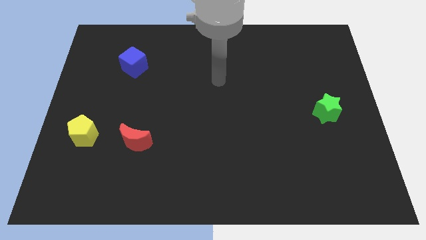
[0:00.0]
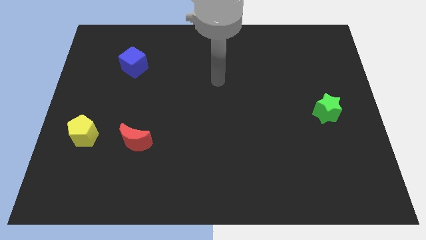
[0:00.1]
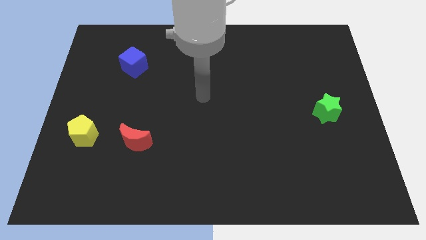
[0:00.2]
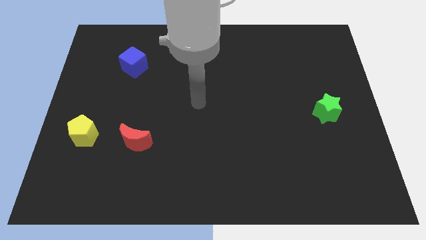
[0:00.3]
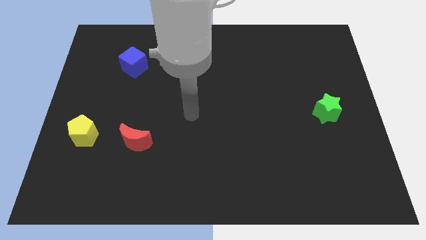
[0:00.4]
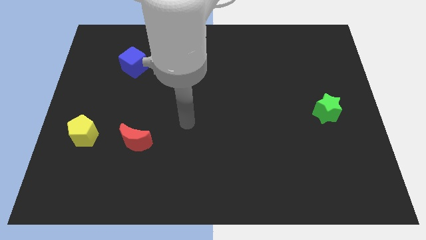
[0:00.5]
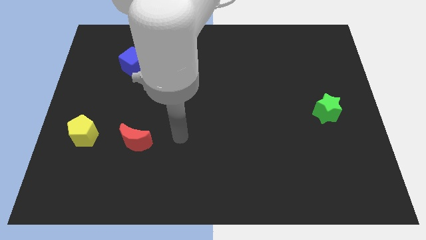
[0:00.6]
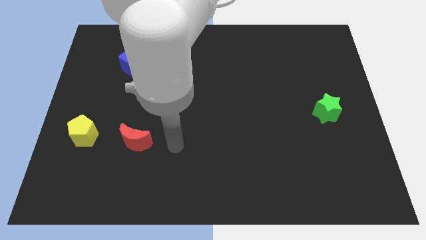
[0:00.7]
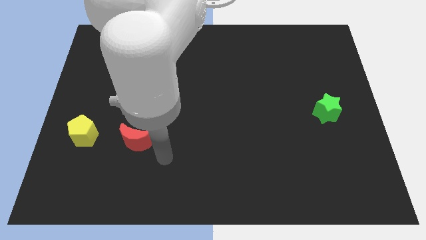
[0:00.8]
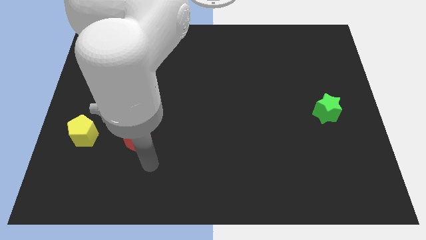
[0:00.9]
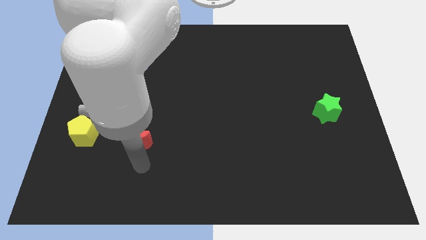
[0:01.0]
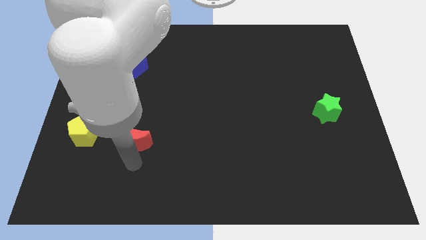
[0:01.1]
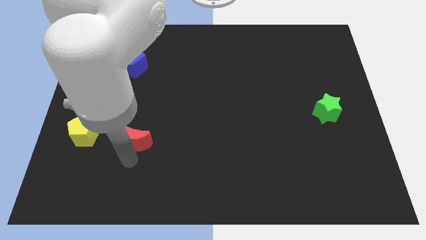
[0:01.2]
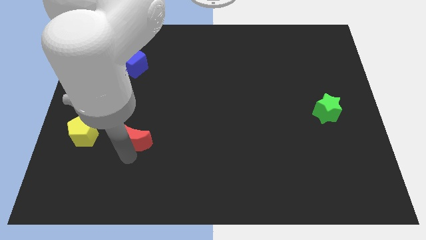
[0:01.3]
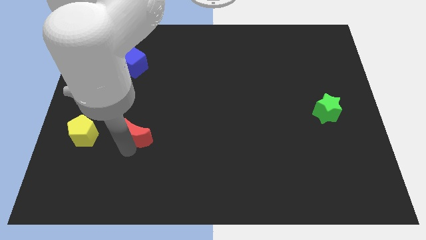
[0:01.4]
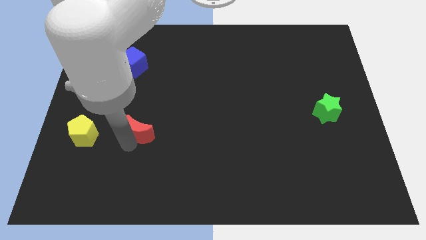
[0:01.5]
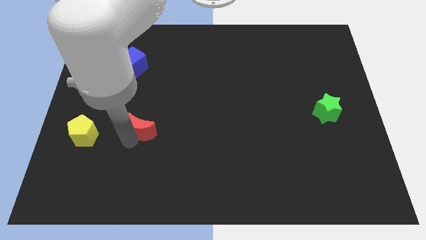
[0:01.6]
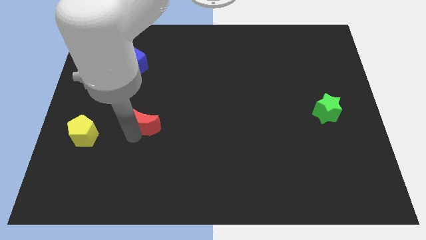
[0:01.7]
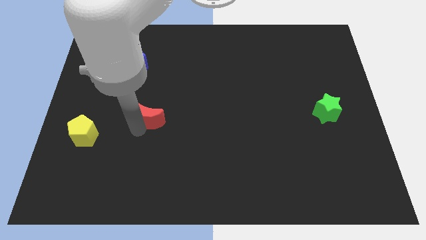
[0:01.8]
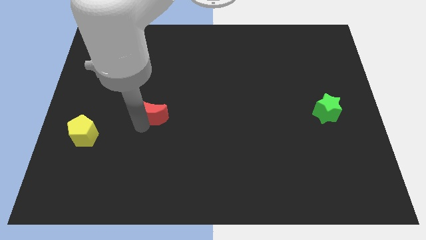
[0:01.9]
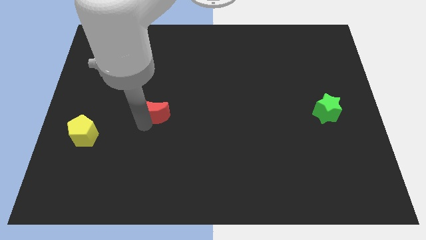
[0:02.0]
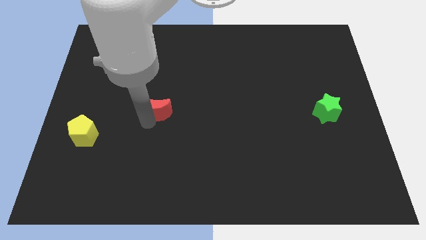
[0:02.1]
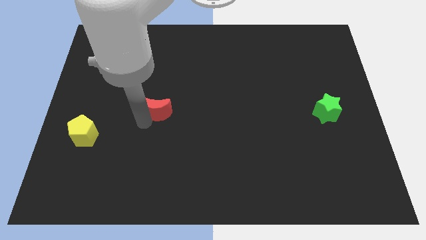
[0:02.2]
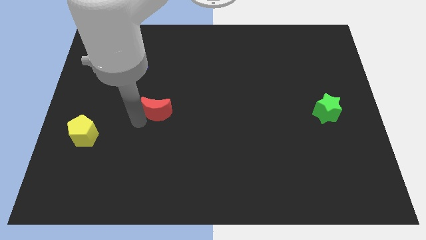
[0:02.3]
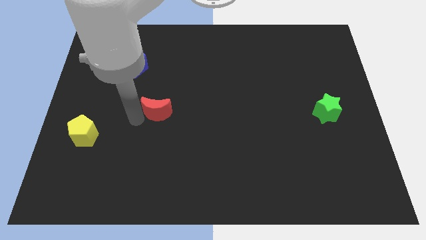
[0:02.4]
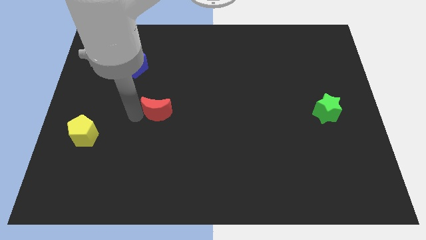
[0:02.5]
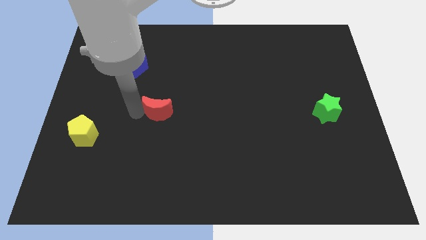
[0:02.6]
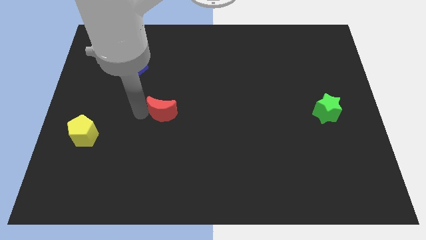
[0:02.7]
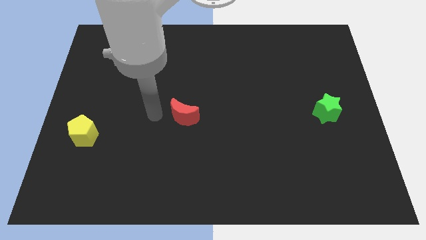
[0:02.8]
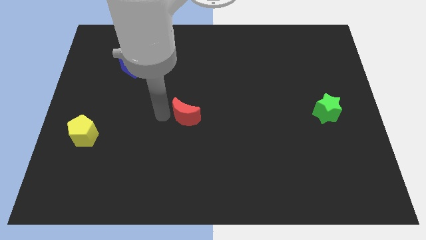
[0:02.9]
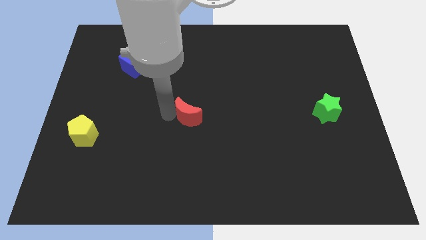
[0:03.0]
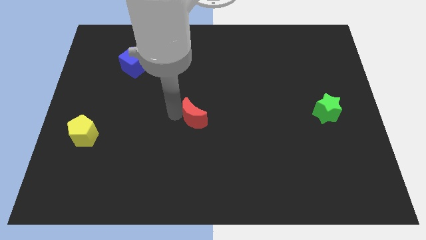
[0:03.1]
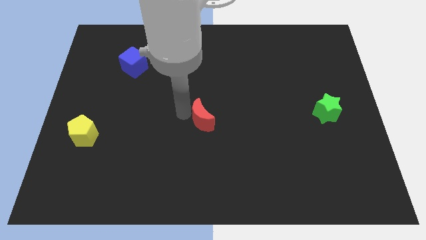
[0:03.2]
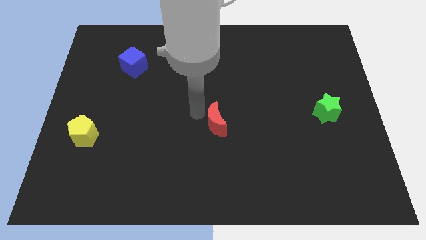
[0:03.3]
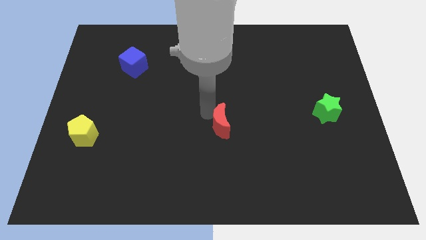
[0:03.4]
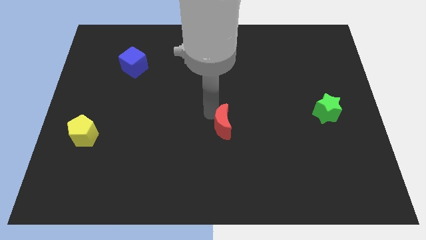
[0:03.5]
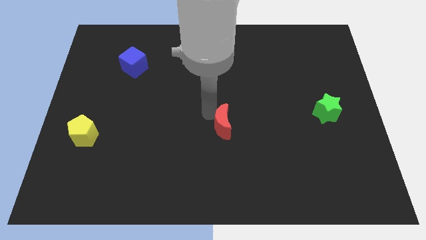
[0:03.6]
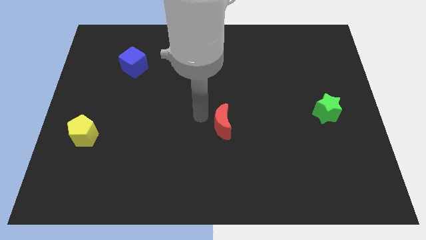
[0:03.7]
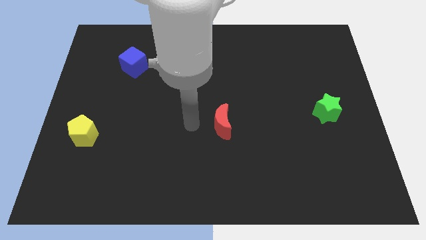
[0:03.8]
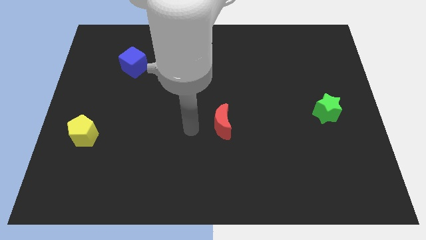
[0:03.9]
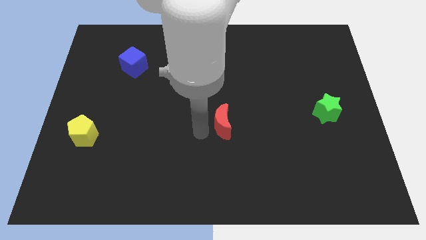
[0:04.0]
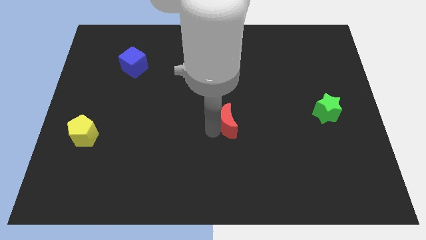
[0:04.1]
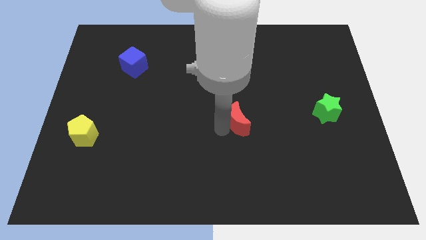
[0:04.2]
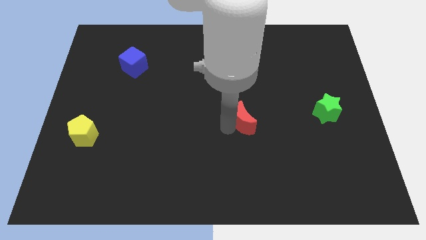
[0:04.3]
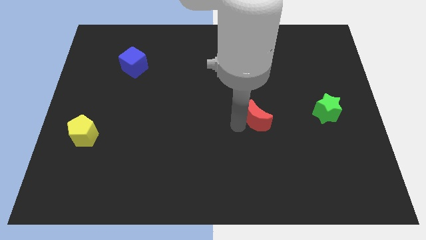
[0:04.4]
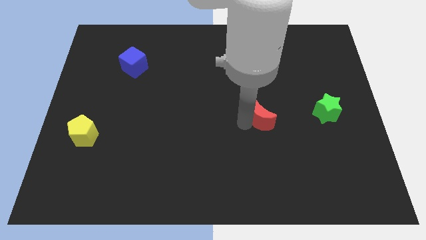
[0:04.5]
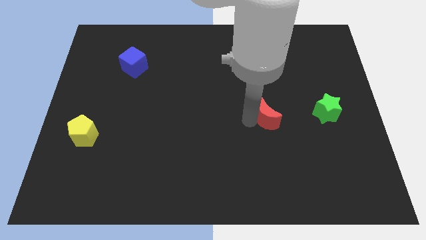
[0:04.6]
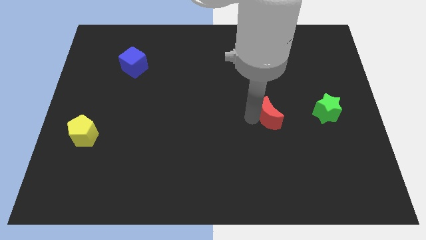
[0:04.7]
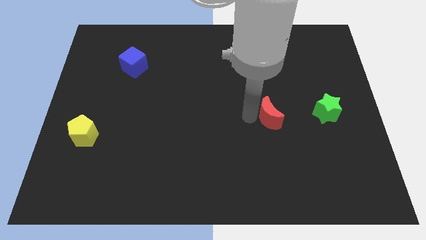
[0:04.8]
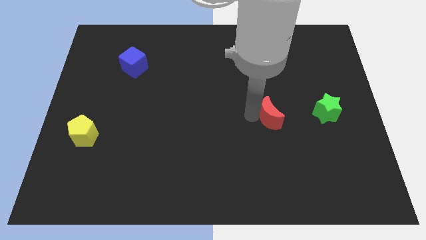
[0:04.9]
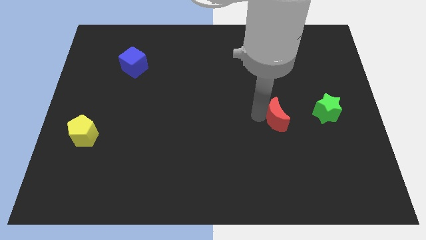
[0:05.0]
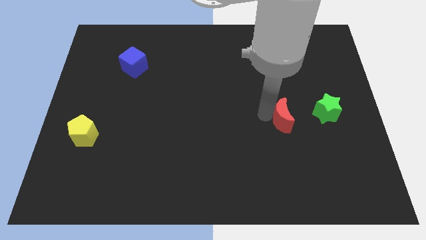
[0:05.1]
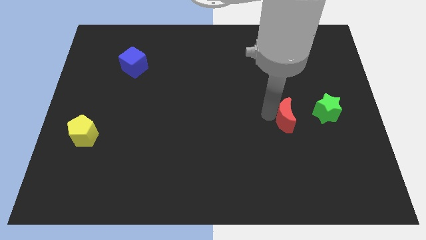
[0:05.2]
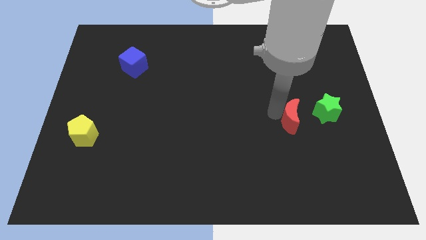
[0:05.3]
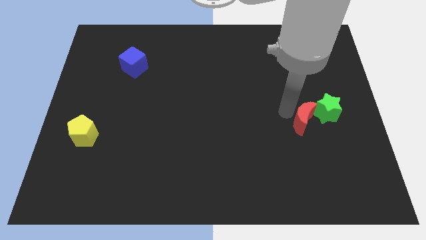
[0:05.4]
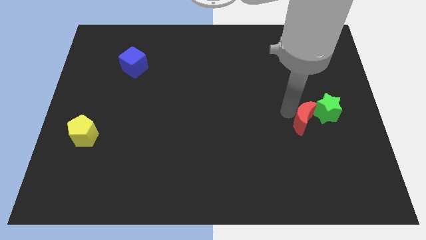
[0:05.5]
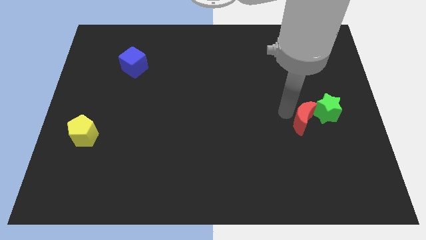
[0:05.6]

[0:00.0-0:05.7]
push the red block towards the star

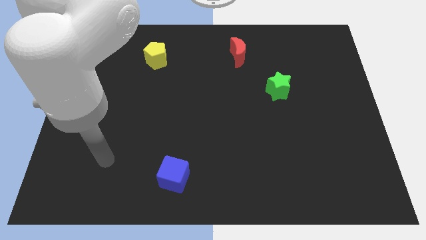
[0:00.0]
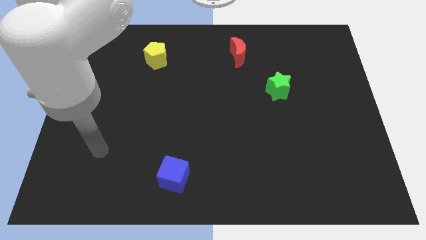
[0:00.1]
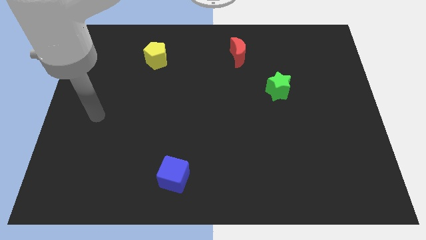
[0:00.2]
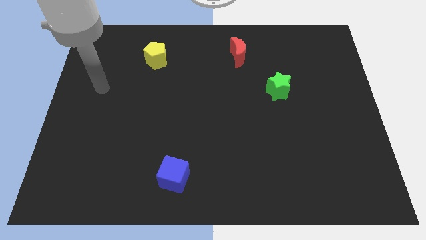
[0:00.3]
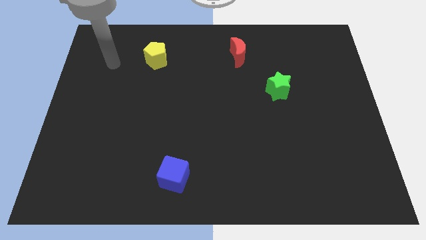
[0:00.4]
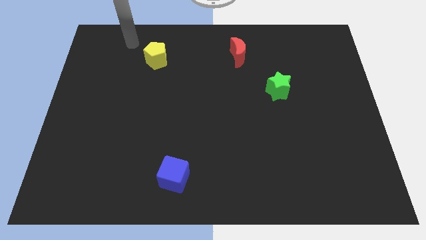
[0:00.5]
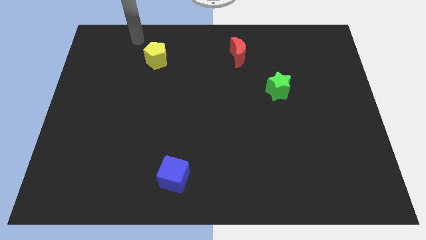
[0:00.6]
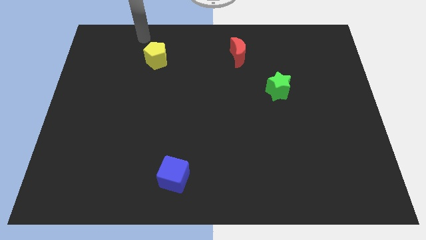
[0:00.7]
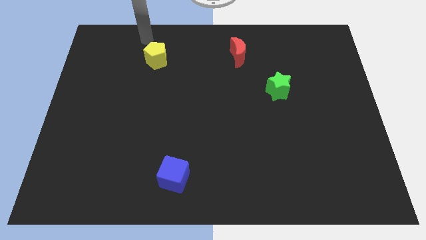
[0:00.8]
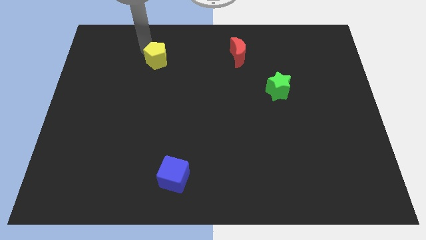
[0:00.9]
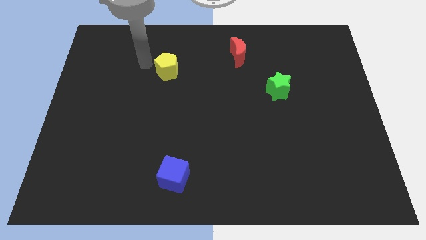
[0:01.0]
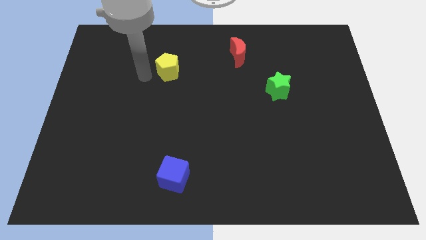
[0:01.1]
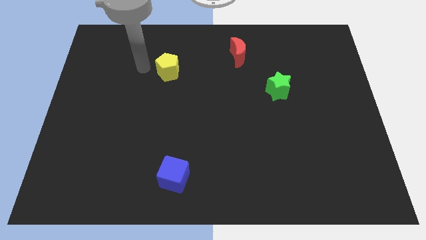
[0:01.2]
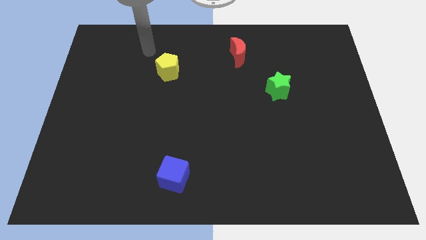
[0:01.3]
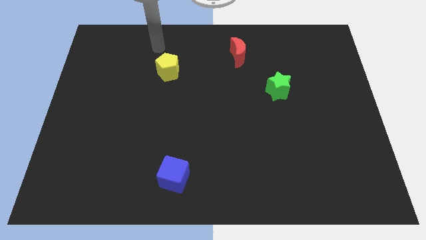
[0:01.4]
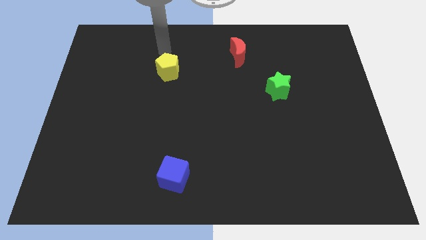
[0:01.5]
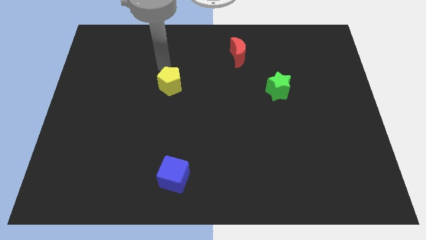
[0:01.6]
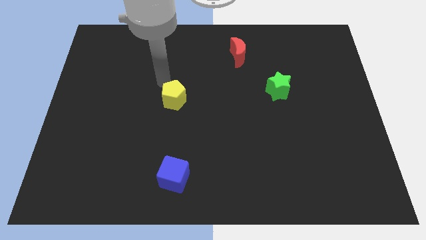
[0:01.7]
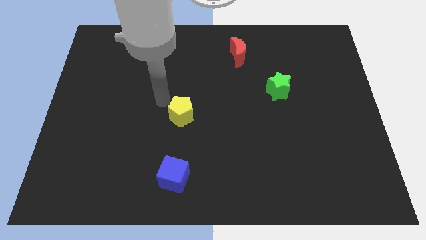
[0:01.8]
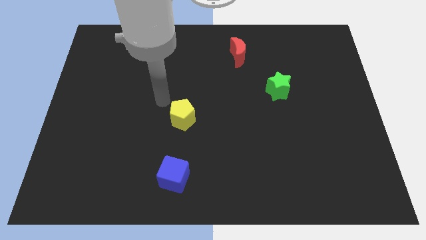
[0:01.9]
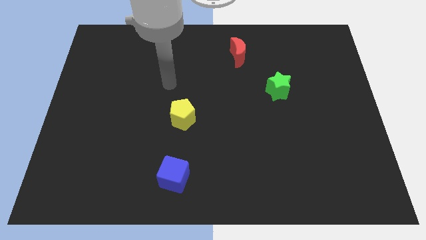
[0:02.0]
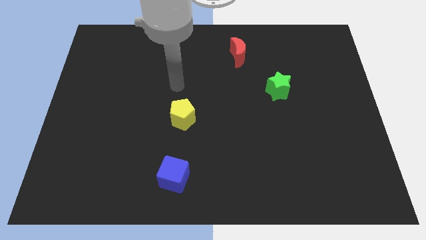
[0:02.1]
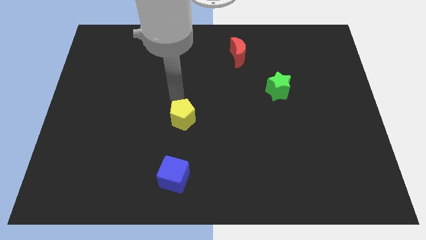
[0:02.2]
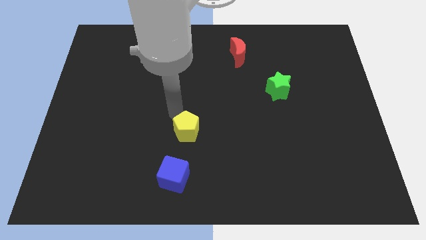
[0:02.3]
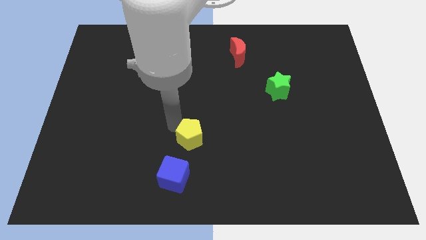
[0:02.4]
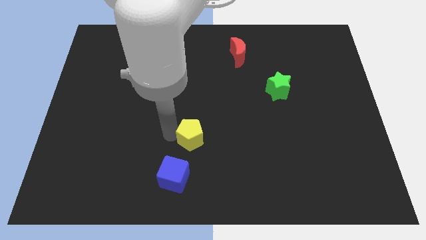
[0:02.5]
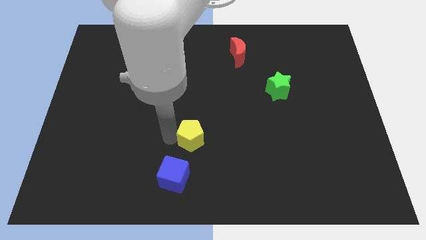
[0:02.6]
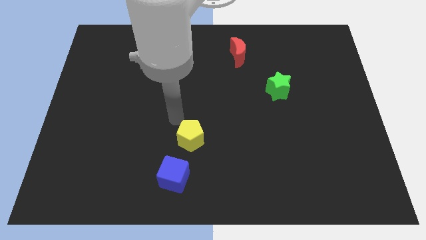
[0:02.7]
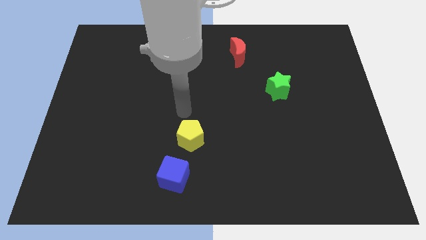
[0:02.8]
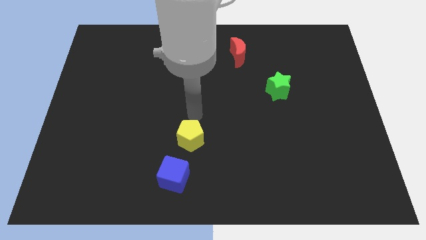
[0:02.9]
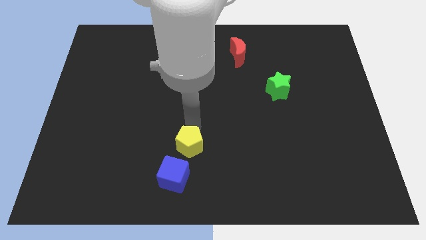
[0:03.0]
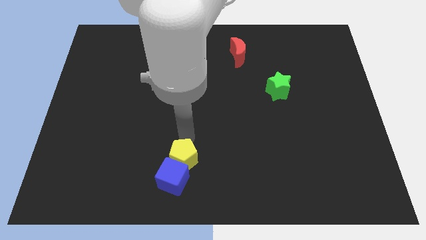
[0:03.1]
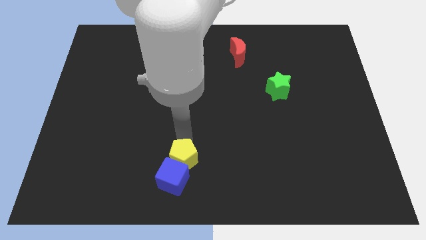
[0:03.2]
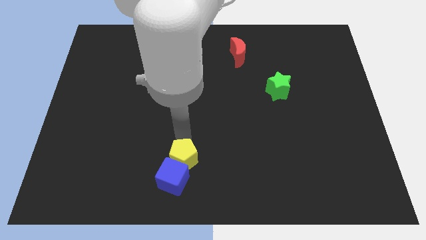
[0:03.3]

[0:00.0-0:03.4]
slide the yellow block close to the blue cube

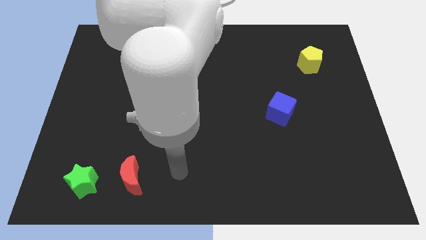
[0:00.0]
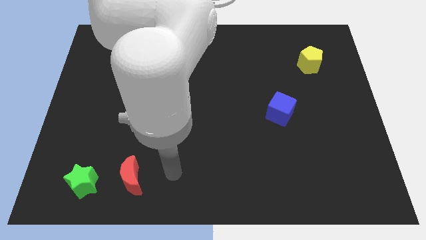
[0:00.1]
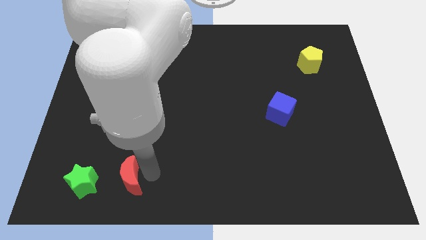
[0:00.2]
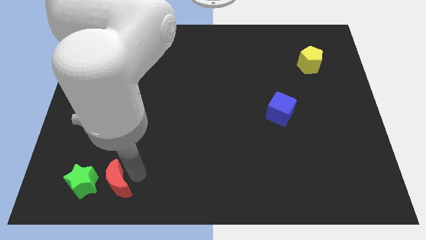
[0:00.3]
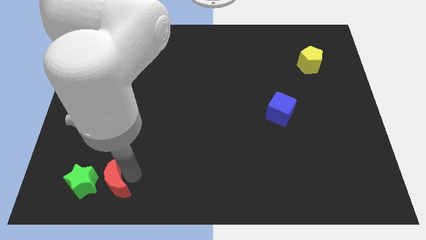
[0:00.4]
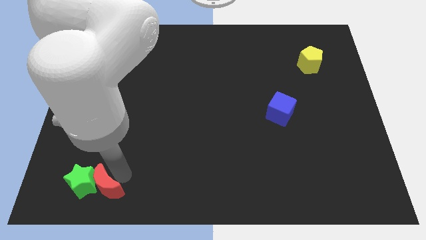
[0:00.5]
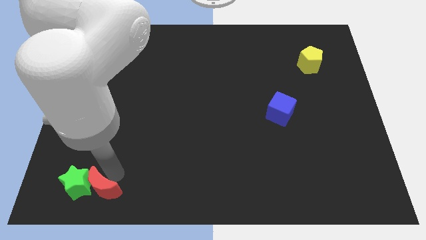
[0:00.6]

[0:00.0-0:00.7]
move the red block towards the green star
